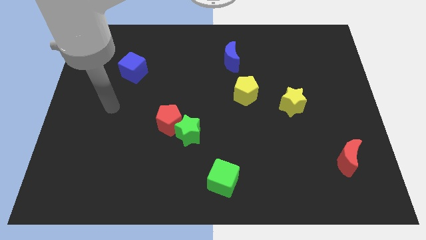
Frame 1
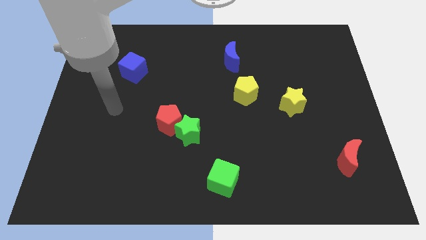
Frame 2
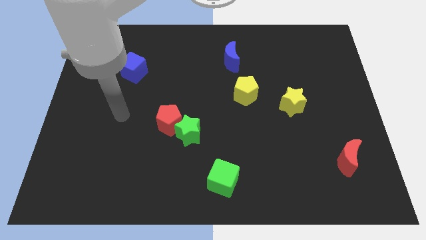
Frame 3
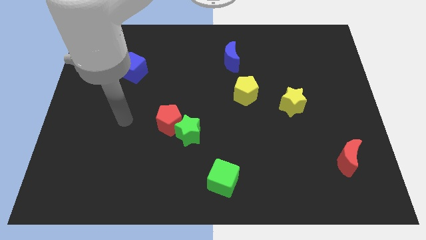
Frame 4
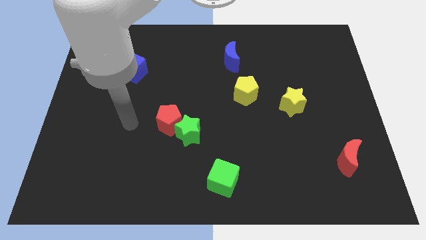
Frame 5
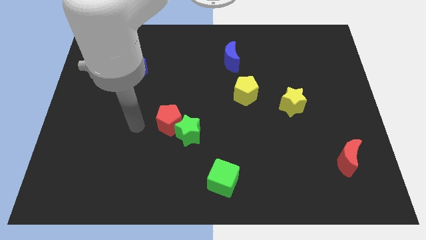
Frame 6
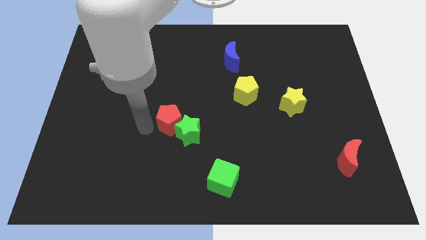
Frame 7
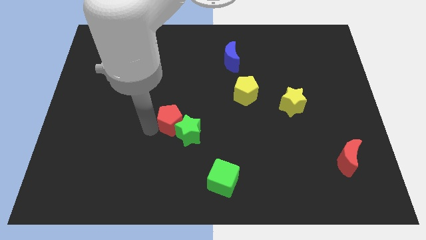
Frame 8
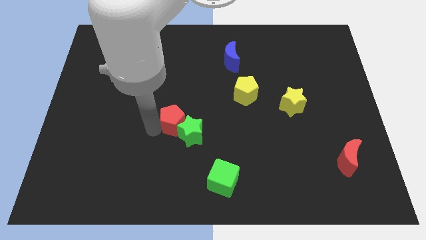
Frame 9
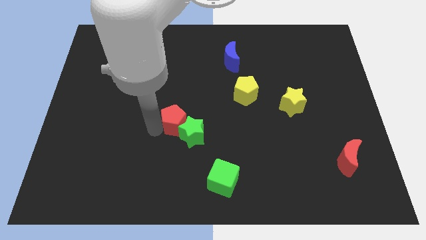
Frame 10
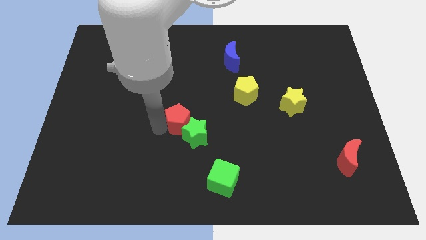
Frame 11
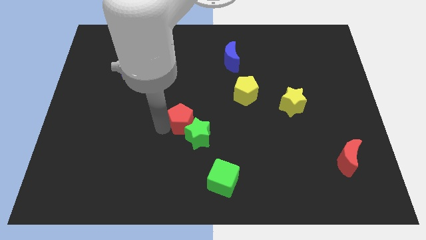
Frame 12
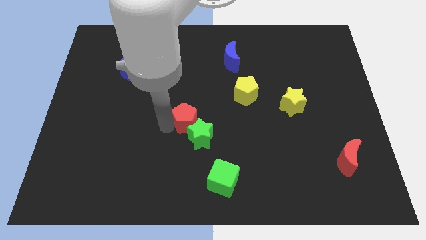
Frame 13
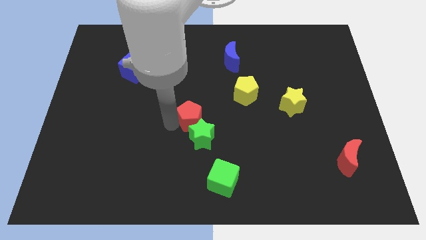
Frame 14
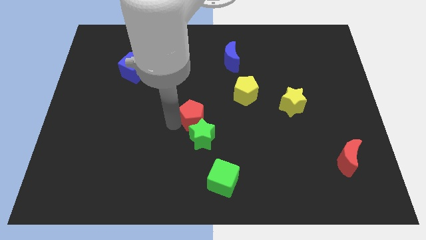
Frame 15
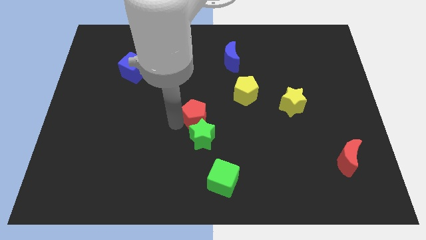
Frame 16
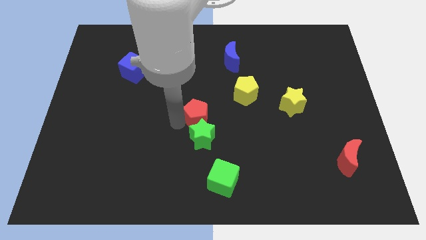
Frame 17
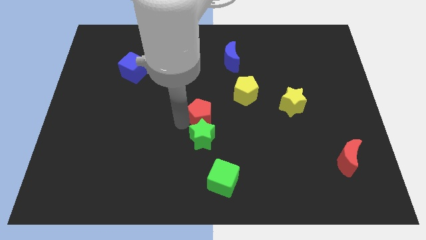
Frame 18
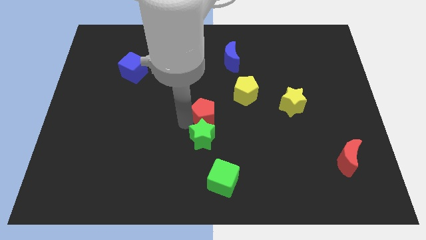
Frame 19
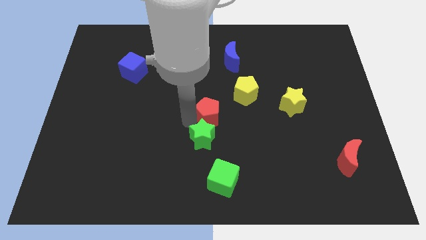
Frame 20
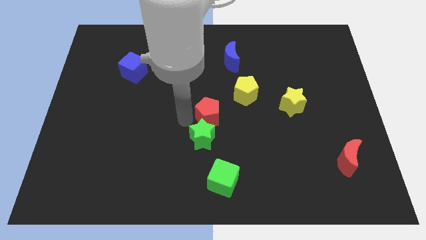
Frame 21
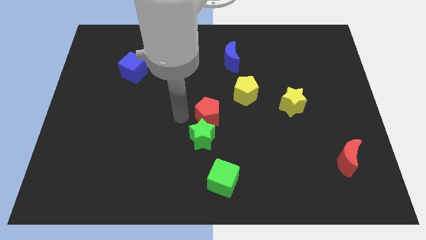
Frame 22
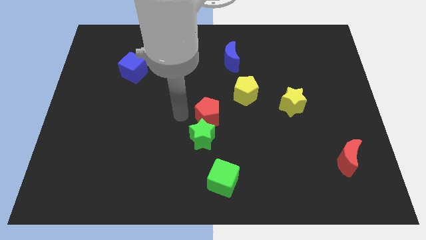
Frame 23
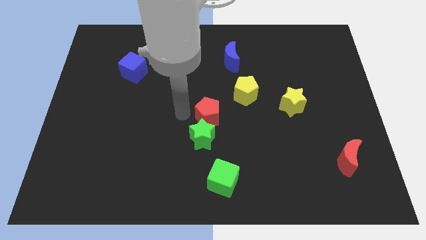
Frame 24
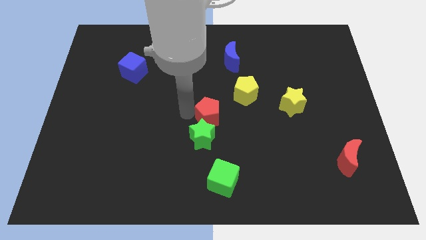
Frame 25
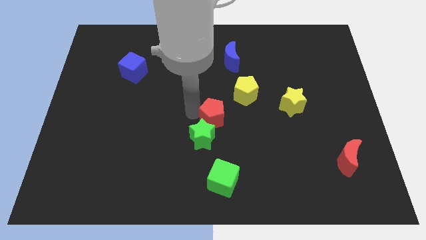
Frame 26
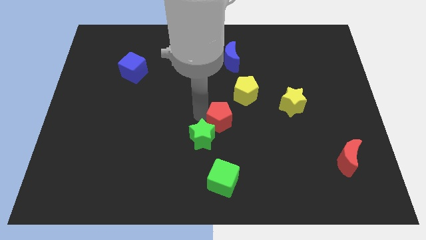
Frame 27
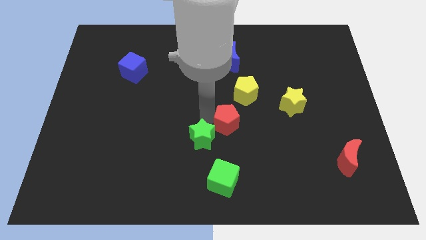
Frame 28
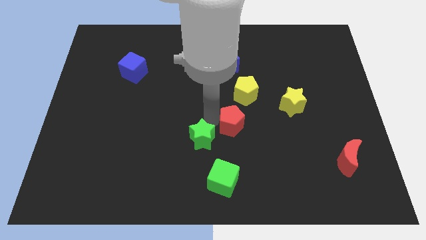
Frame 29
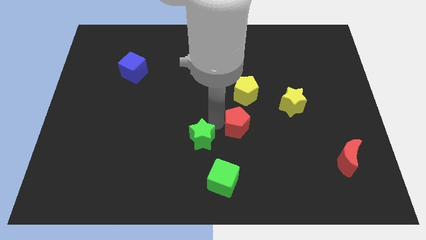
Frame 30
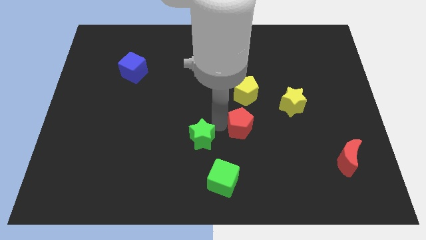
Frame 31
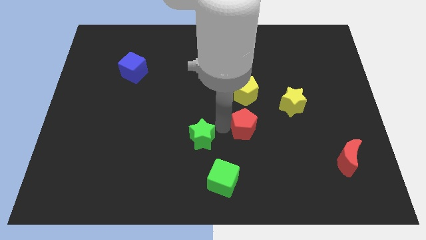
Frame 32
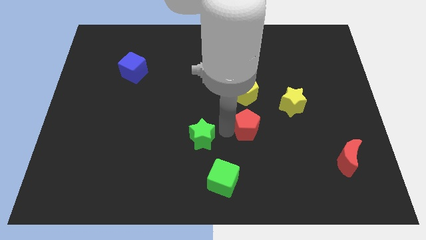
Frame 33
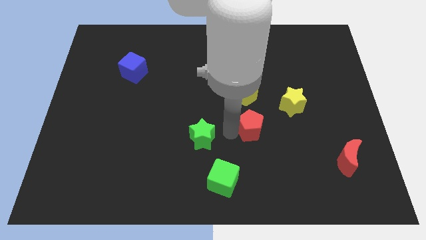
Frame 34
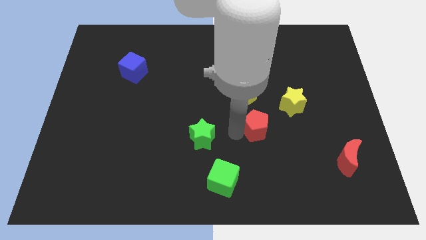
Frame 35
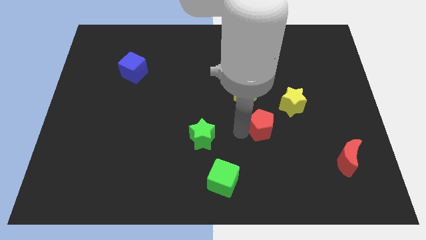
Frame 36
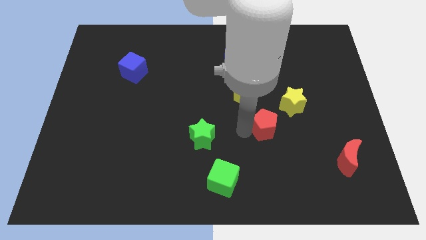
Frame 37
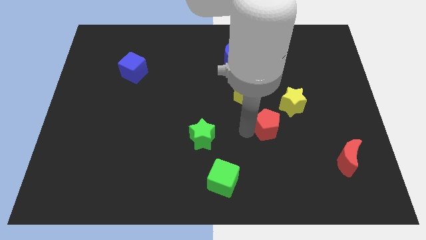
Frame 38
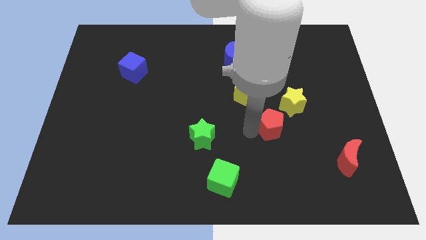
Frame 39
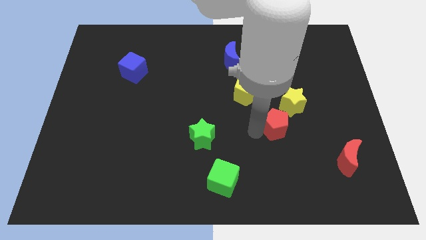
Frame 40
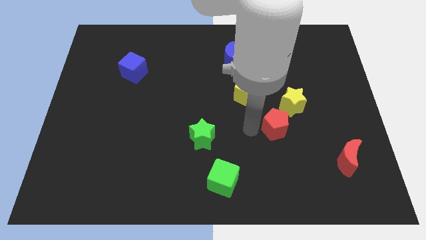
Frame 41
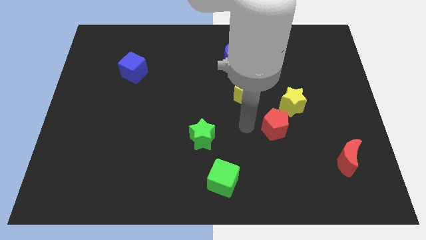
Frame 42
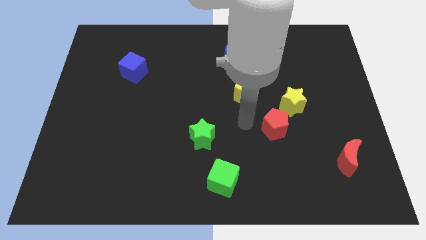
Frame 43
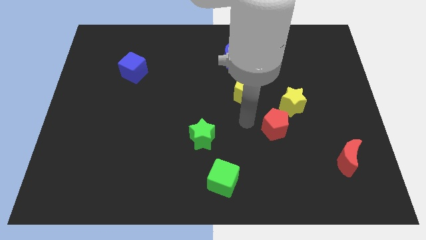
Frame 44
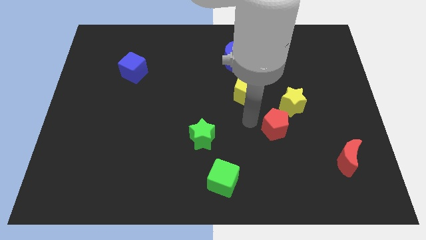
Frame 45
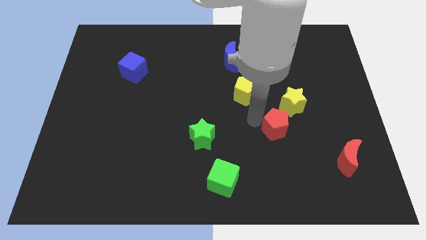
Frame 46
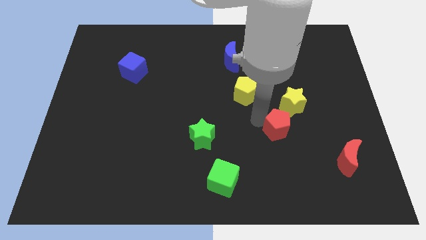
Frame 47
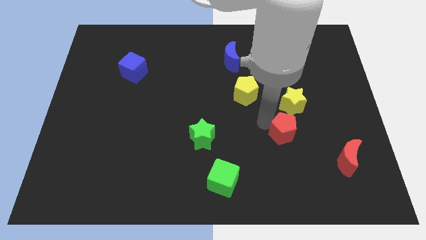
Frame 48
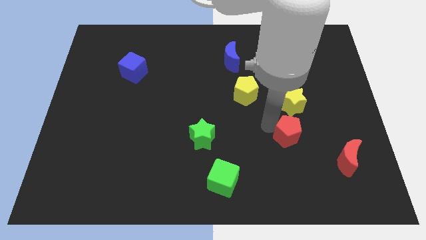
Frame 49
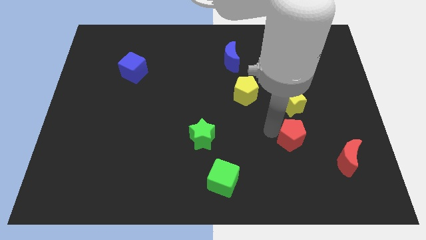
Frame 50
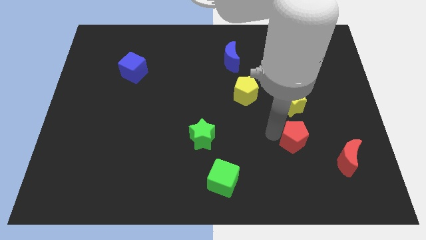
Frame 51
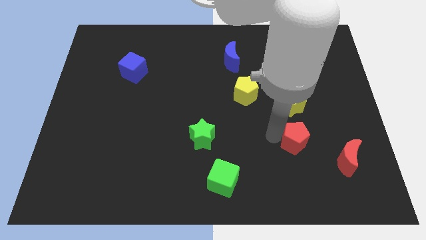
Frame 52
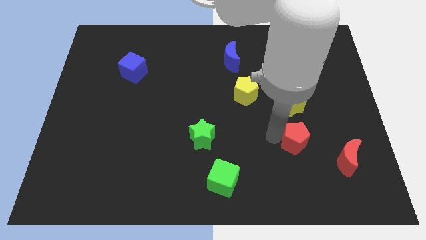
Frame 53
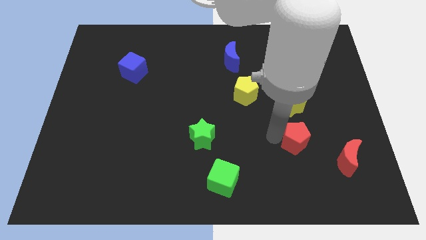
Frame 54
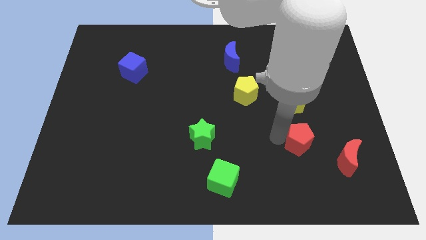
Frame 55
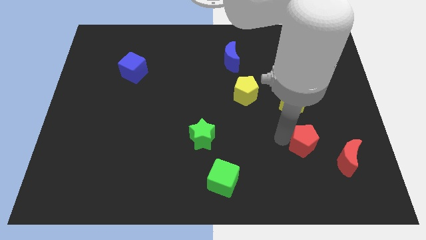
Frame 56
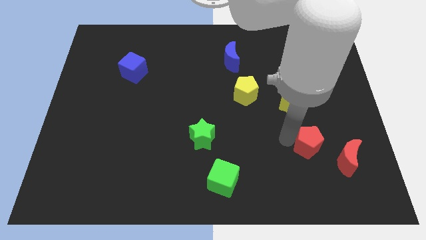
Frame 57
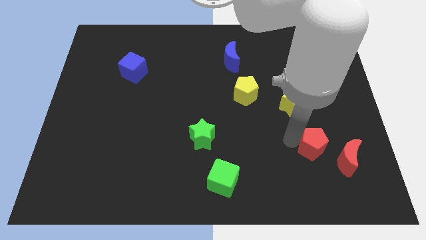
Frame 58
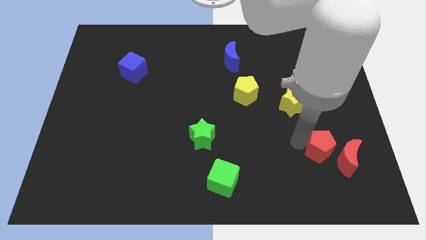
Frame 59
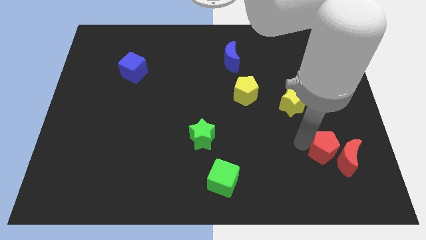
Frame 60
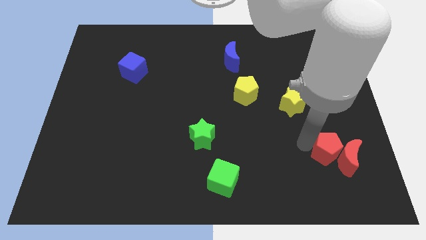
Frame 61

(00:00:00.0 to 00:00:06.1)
put the red pentagon next to the red moon

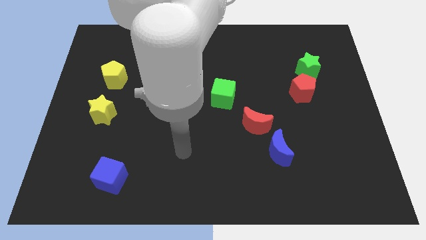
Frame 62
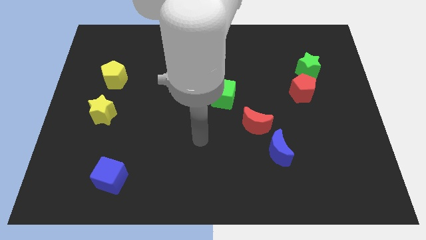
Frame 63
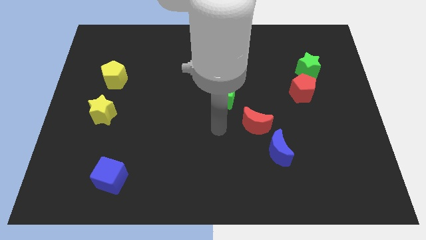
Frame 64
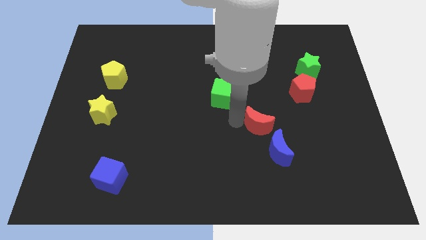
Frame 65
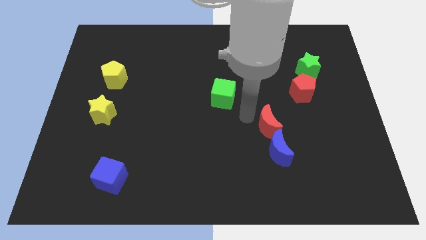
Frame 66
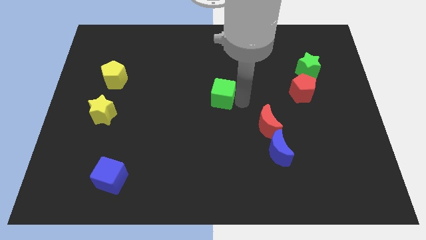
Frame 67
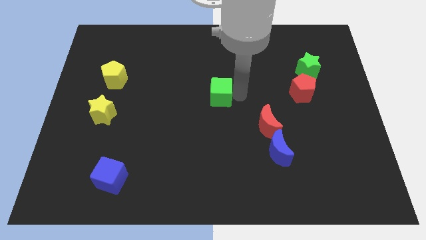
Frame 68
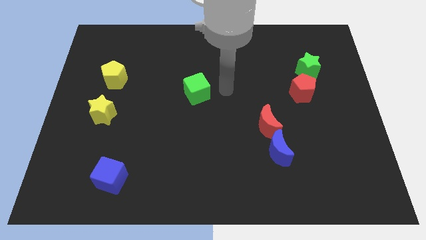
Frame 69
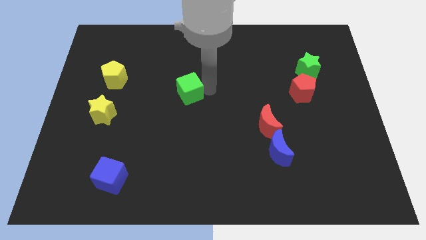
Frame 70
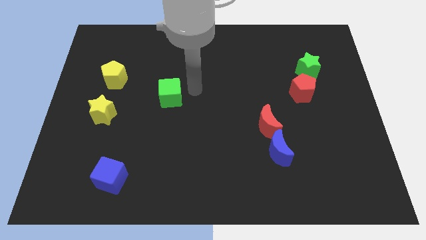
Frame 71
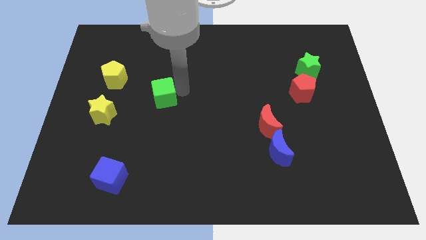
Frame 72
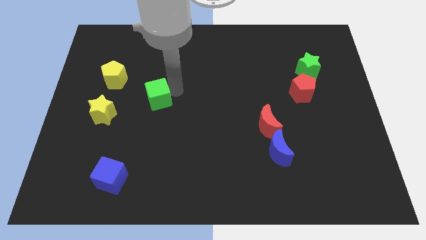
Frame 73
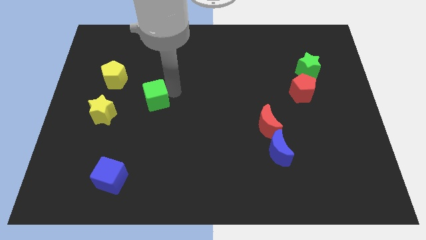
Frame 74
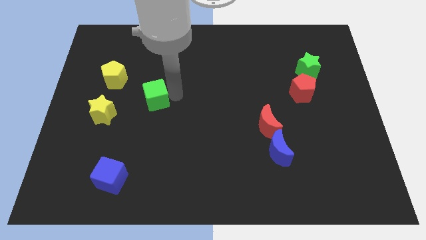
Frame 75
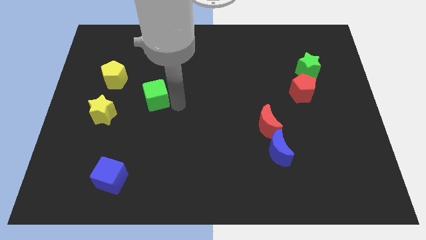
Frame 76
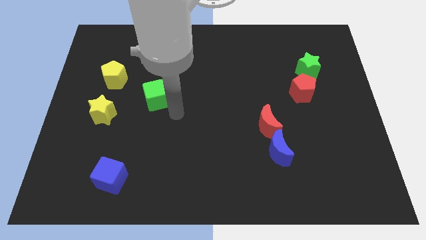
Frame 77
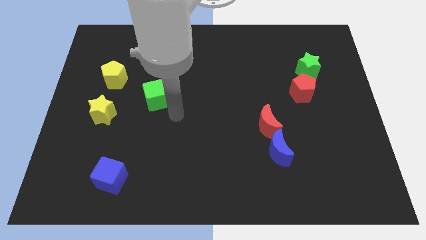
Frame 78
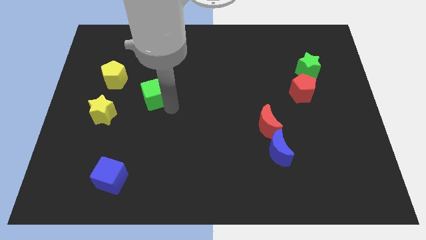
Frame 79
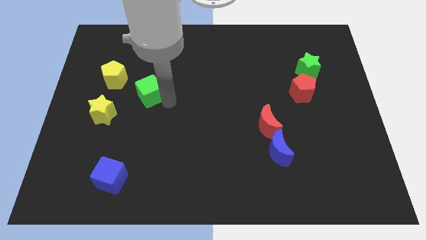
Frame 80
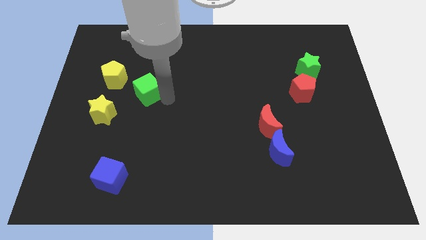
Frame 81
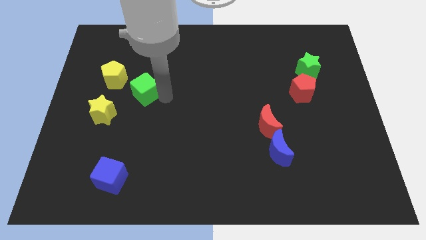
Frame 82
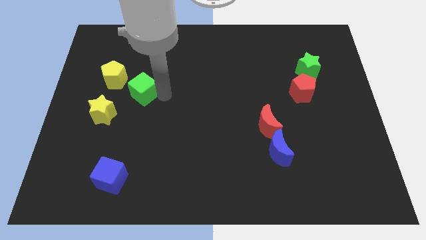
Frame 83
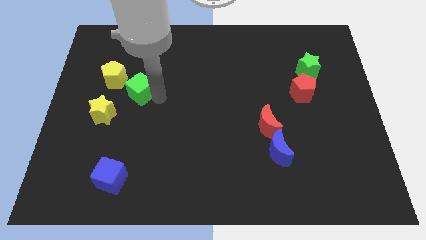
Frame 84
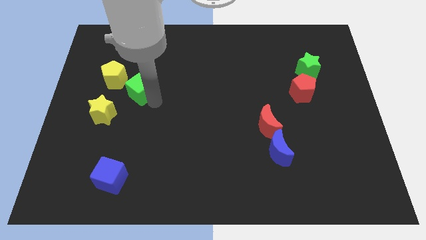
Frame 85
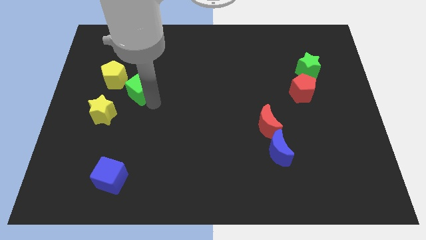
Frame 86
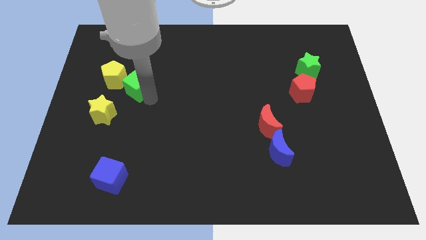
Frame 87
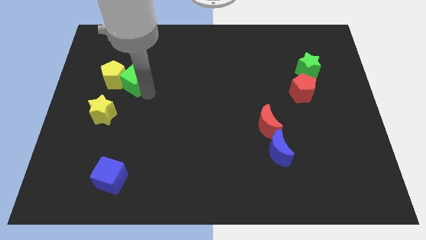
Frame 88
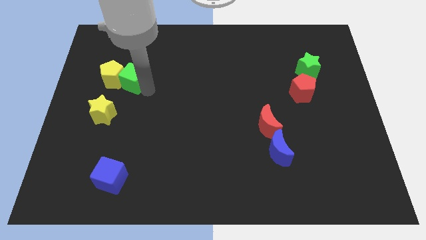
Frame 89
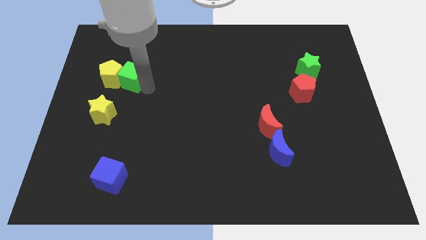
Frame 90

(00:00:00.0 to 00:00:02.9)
slide the green cube to the yellow pentagon
